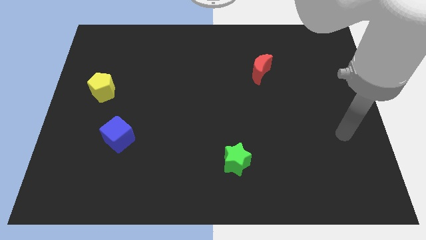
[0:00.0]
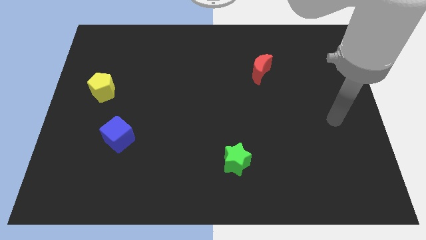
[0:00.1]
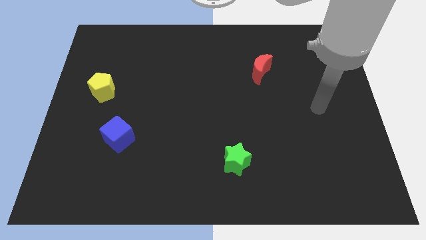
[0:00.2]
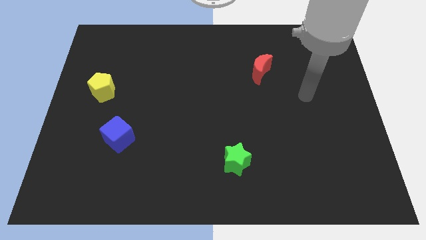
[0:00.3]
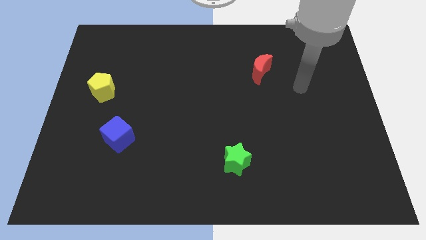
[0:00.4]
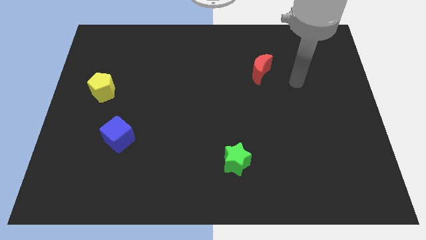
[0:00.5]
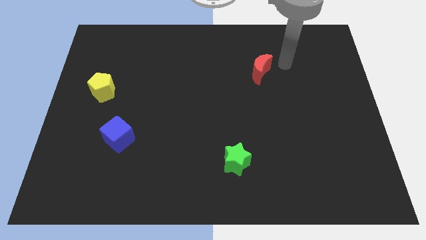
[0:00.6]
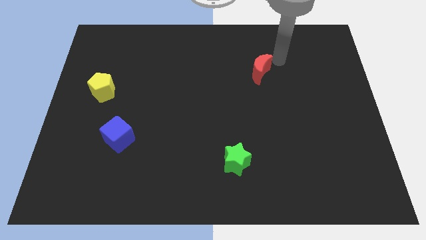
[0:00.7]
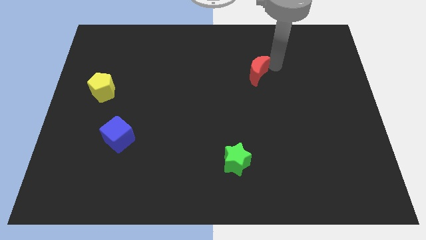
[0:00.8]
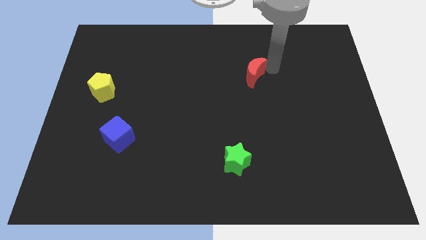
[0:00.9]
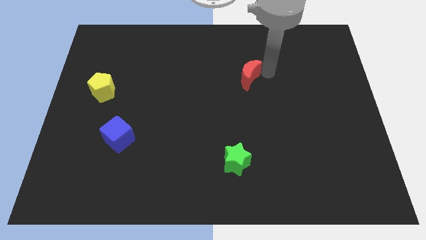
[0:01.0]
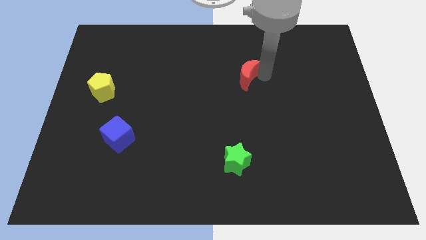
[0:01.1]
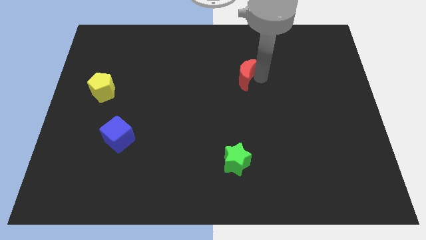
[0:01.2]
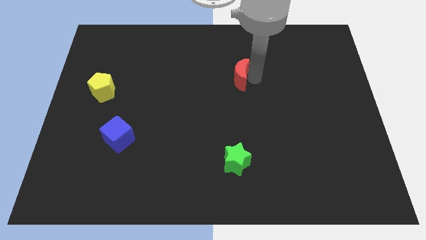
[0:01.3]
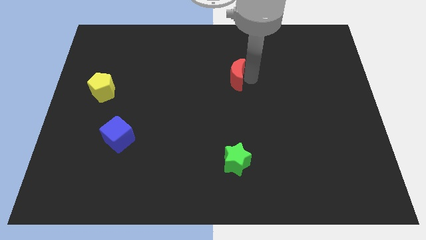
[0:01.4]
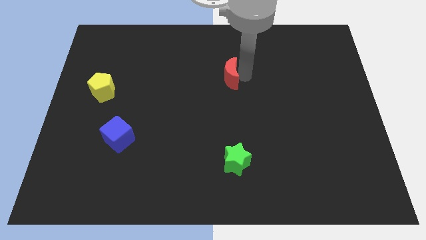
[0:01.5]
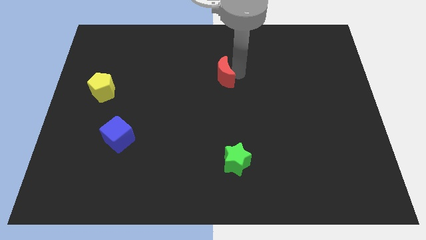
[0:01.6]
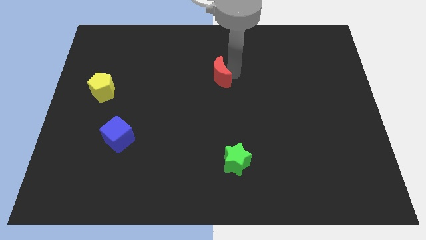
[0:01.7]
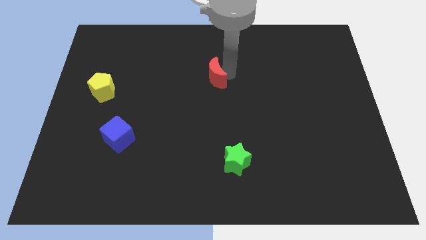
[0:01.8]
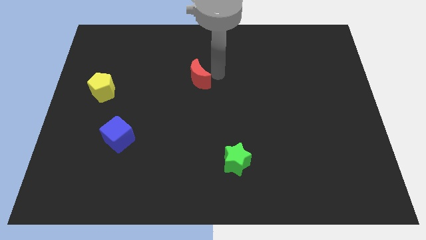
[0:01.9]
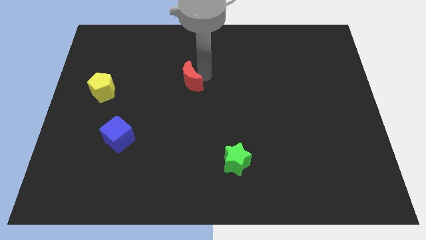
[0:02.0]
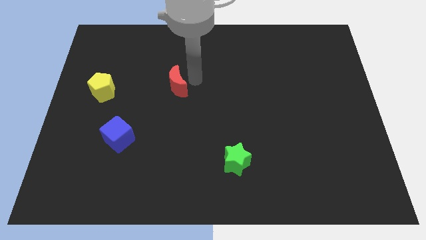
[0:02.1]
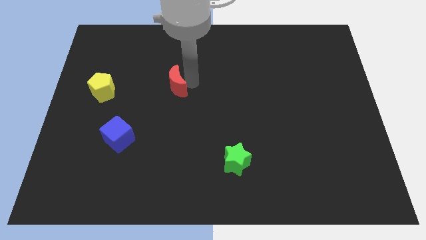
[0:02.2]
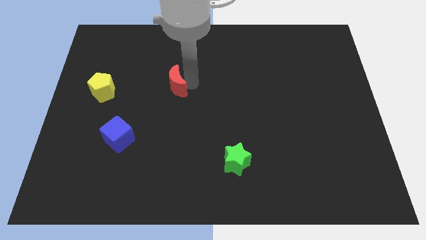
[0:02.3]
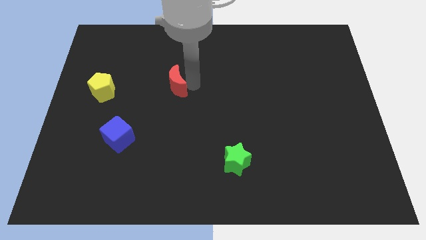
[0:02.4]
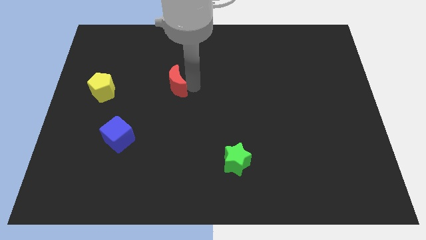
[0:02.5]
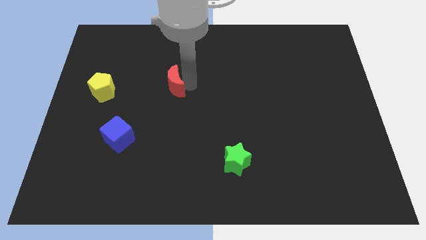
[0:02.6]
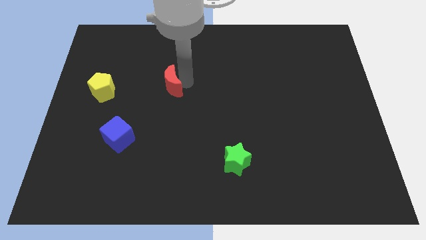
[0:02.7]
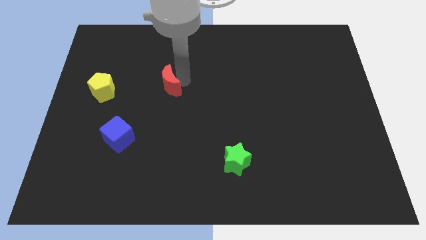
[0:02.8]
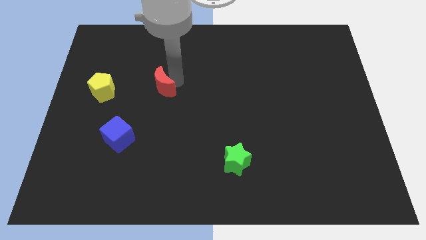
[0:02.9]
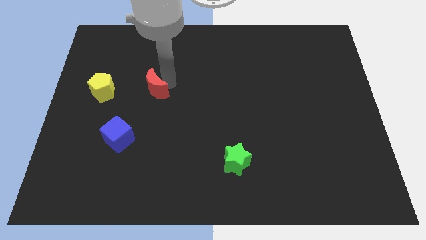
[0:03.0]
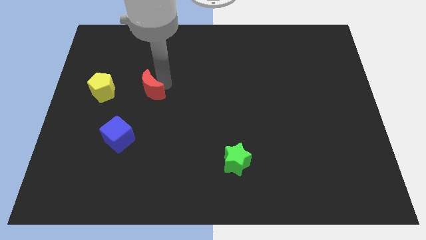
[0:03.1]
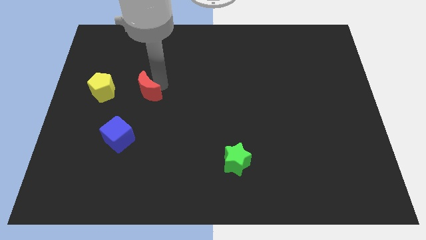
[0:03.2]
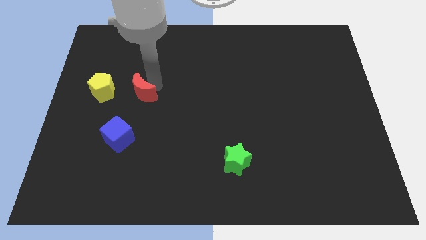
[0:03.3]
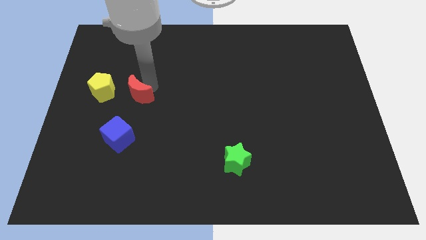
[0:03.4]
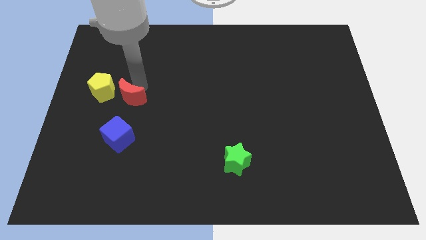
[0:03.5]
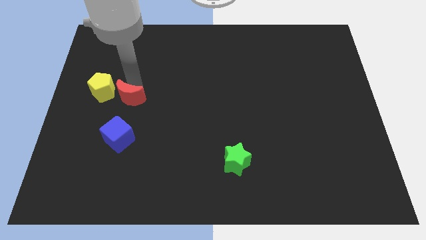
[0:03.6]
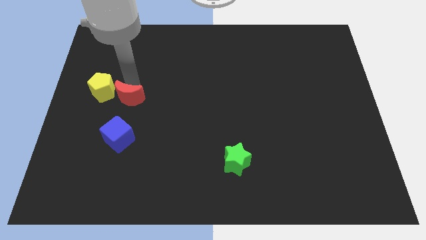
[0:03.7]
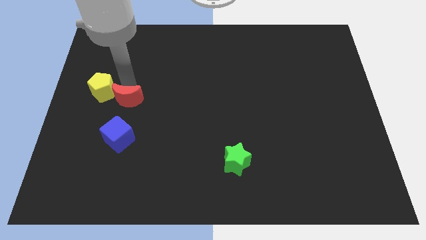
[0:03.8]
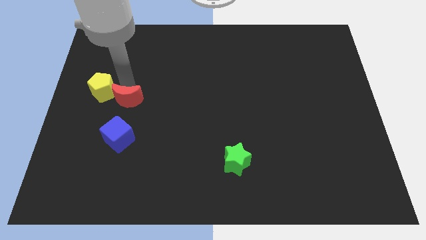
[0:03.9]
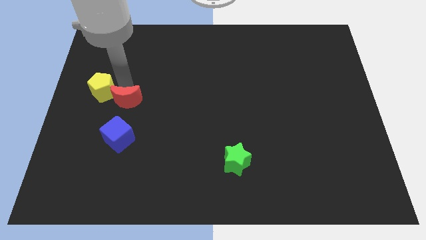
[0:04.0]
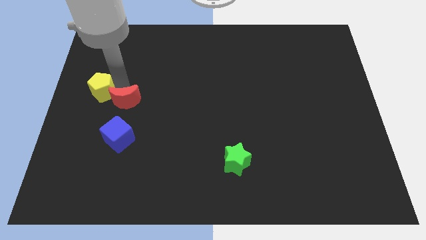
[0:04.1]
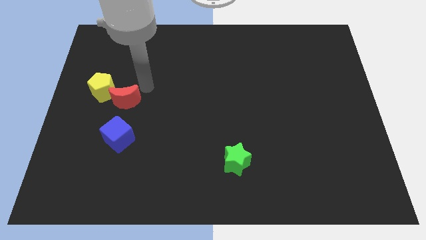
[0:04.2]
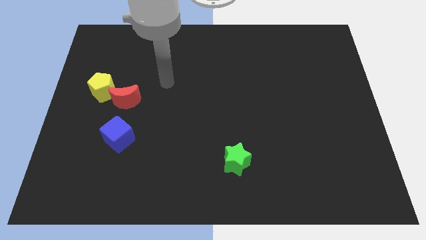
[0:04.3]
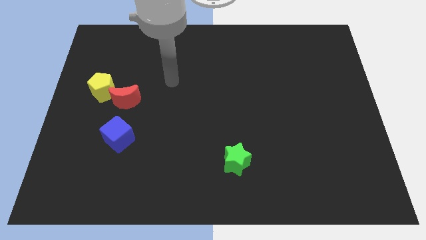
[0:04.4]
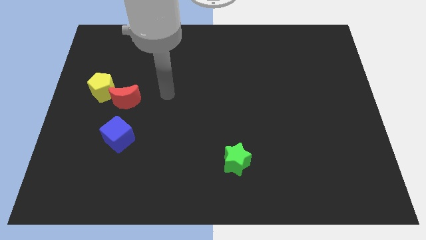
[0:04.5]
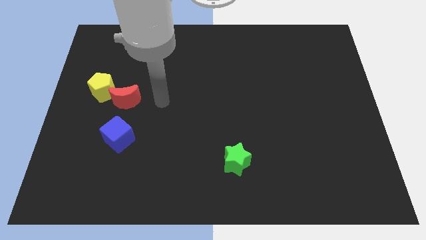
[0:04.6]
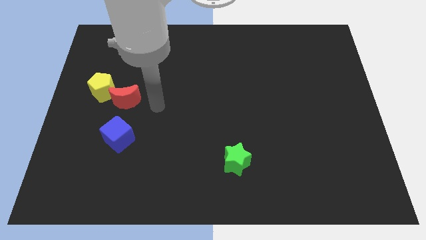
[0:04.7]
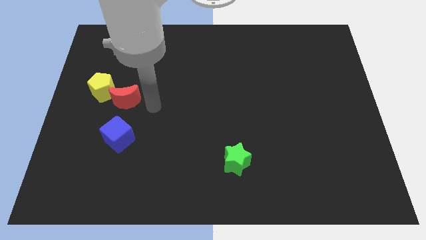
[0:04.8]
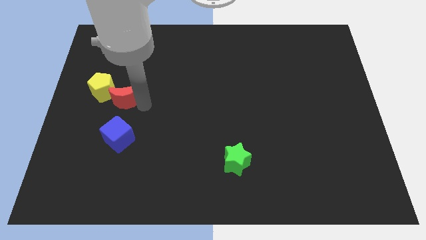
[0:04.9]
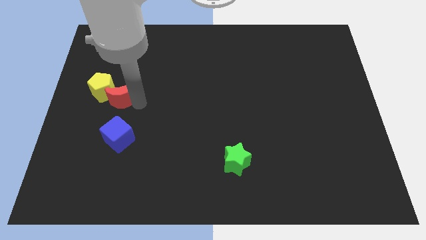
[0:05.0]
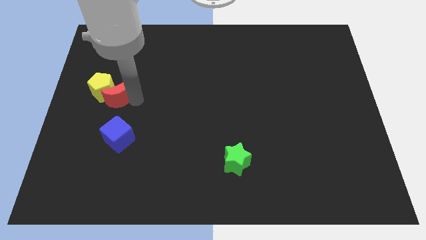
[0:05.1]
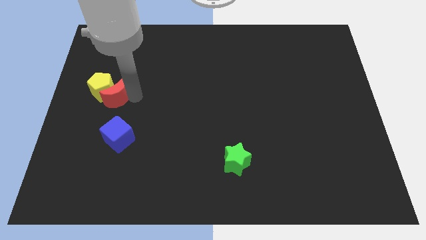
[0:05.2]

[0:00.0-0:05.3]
move the red moon to the pentagon

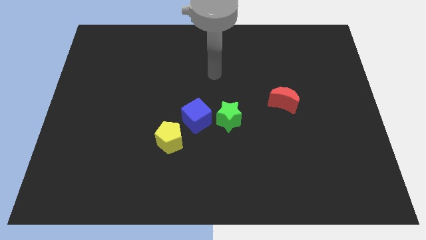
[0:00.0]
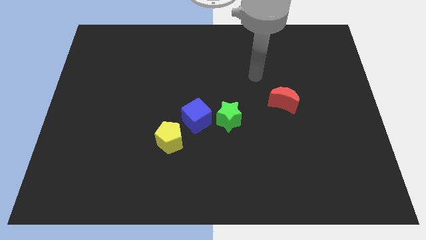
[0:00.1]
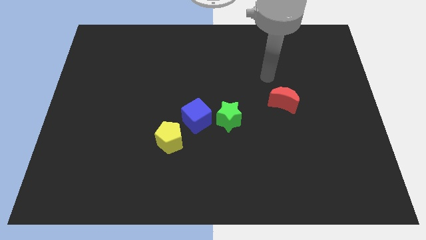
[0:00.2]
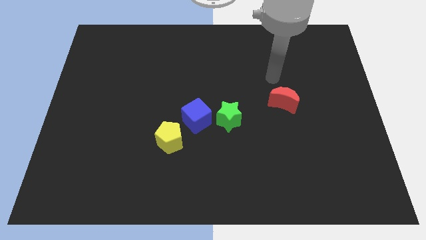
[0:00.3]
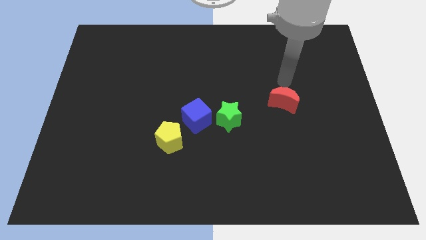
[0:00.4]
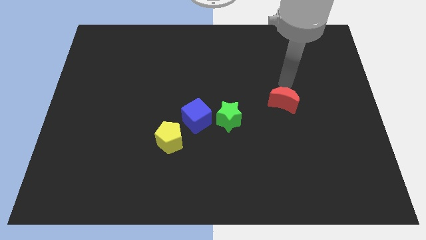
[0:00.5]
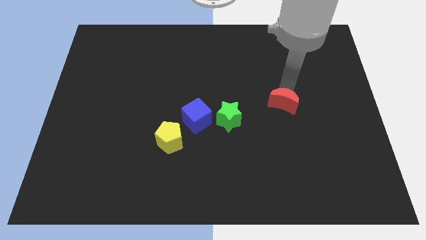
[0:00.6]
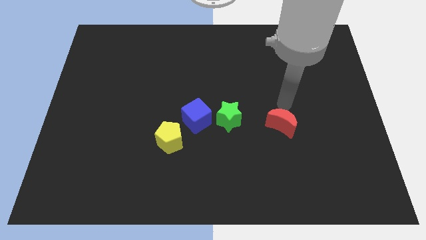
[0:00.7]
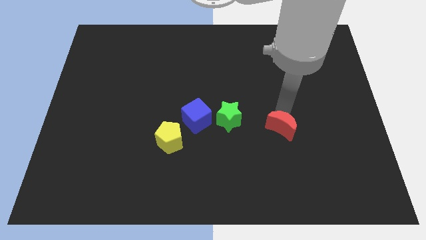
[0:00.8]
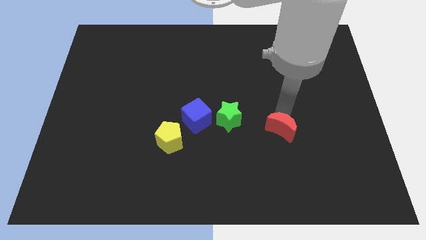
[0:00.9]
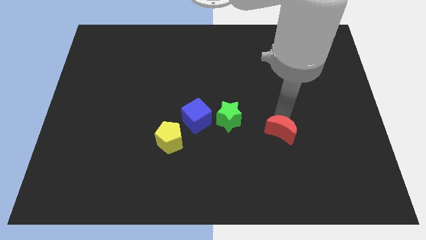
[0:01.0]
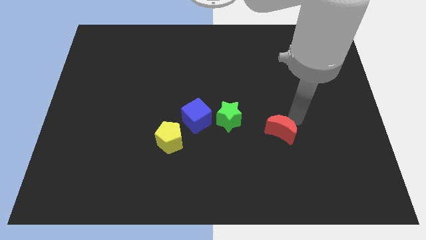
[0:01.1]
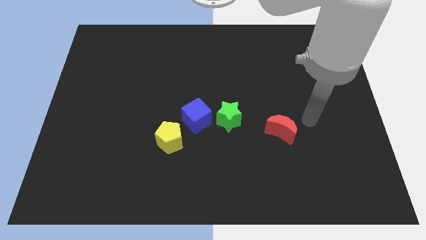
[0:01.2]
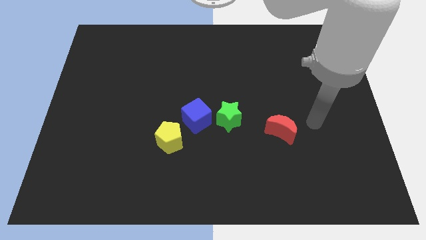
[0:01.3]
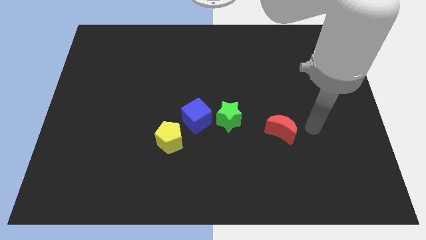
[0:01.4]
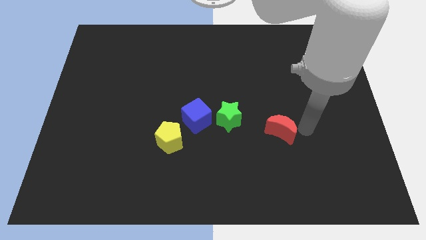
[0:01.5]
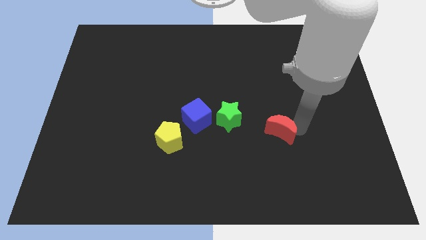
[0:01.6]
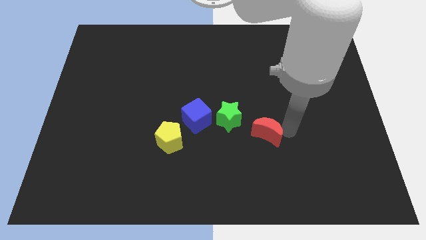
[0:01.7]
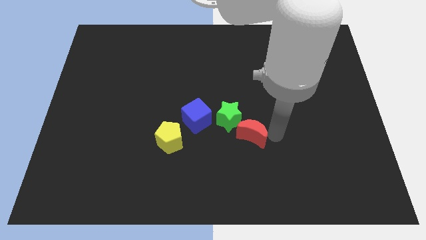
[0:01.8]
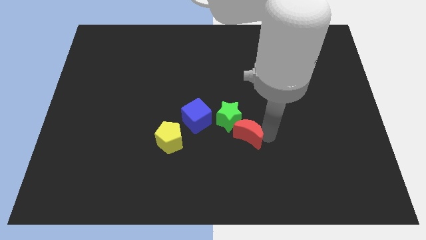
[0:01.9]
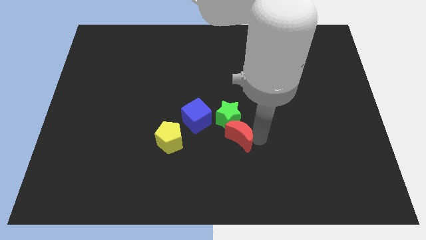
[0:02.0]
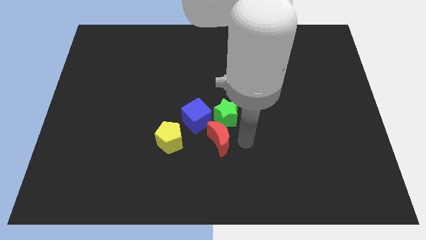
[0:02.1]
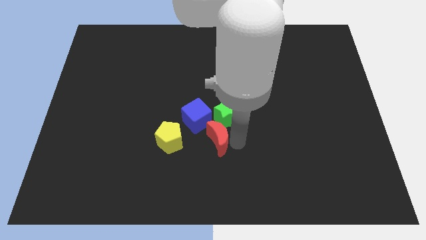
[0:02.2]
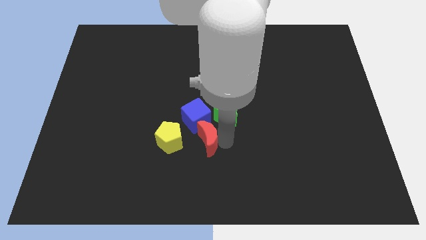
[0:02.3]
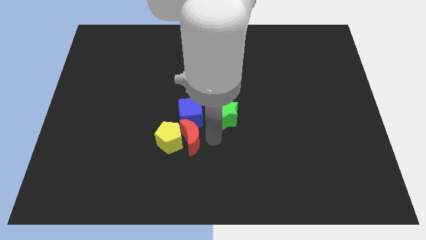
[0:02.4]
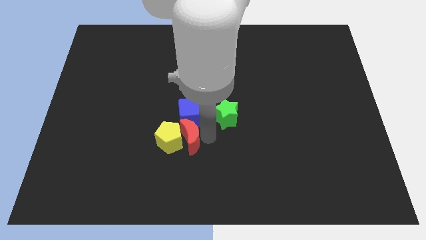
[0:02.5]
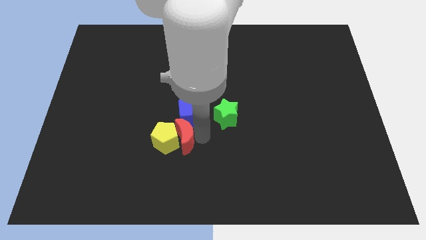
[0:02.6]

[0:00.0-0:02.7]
slide the moon next to the pentagon

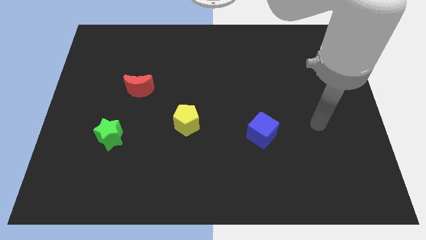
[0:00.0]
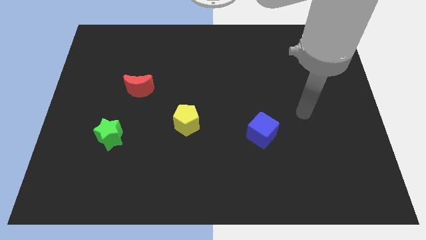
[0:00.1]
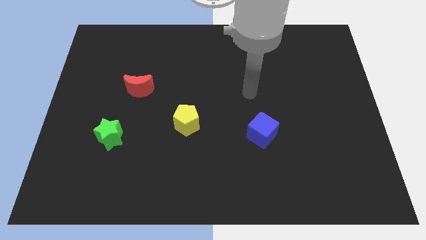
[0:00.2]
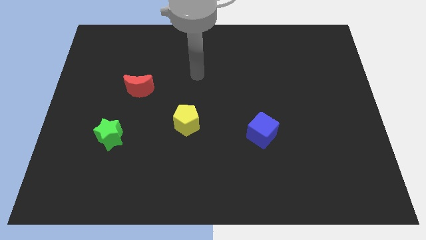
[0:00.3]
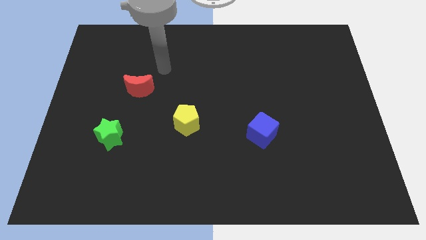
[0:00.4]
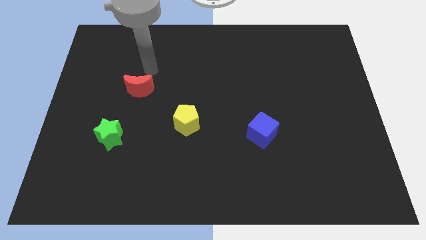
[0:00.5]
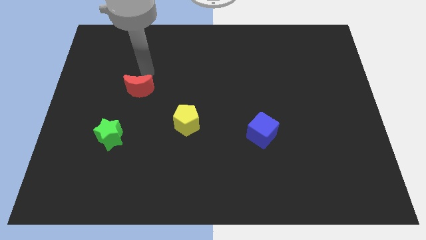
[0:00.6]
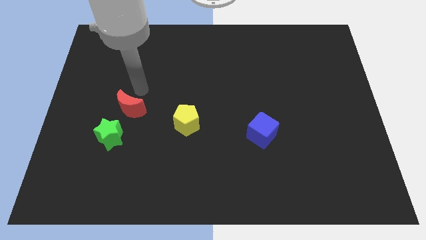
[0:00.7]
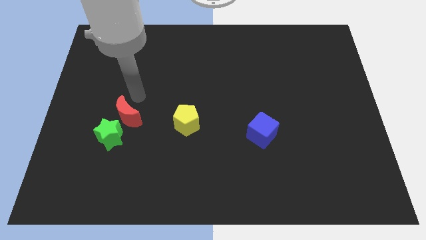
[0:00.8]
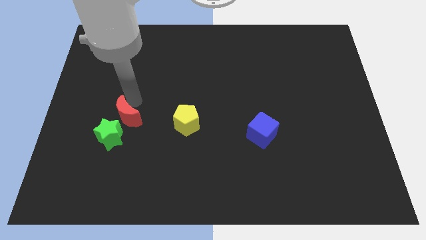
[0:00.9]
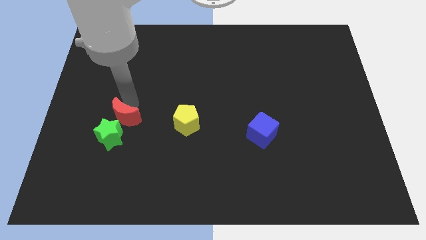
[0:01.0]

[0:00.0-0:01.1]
push the moon close to the green star
